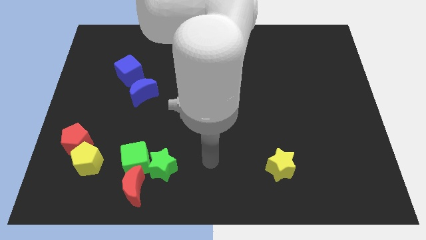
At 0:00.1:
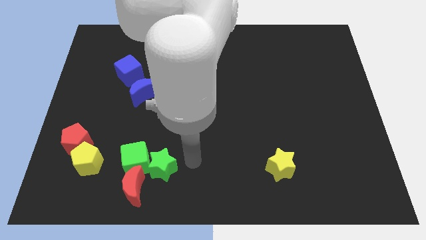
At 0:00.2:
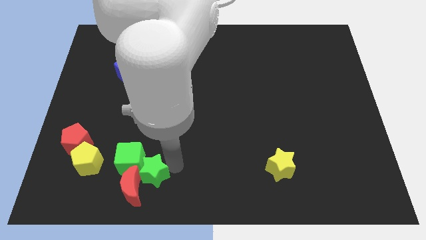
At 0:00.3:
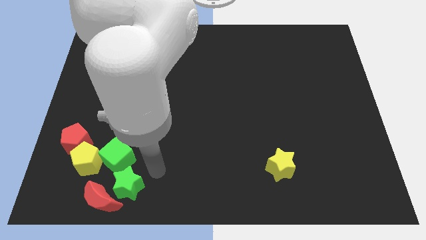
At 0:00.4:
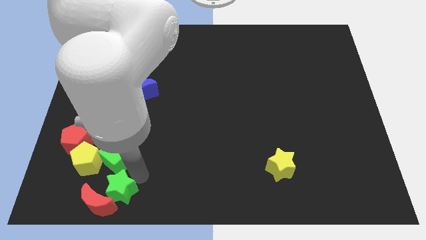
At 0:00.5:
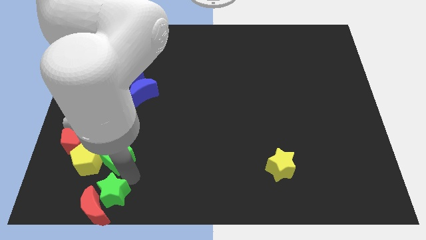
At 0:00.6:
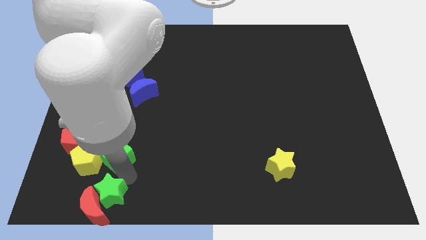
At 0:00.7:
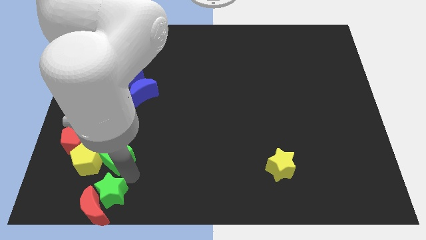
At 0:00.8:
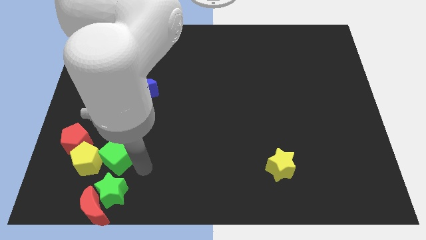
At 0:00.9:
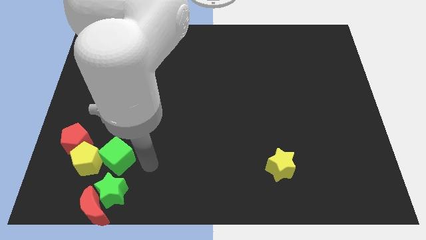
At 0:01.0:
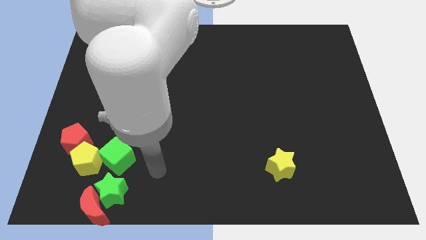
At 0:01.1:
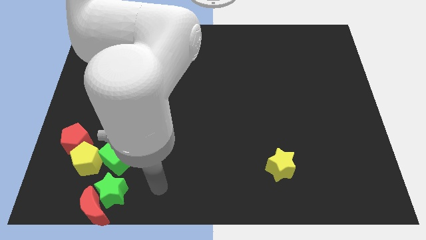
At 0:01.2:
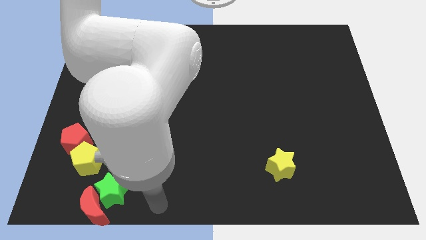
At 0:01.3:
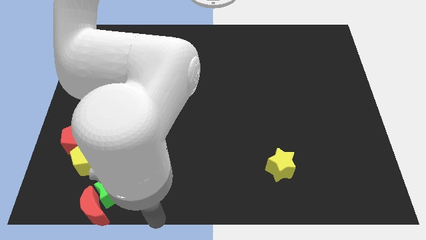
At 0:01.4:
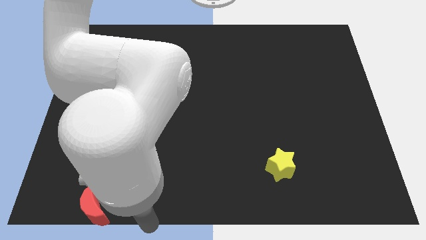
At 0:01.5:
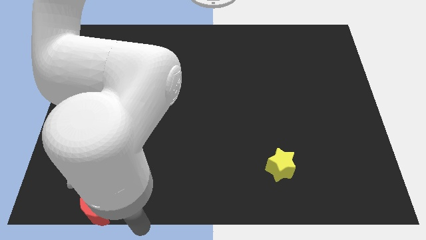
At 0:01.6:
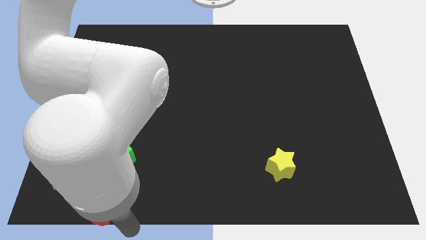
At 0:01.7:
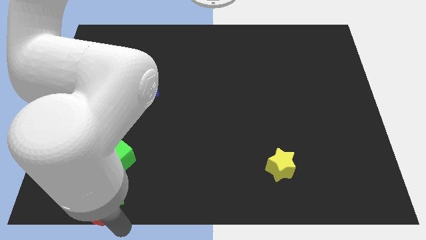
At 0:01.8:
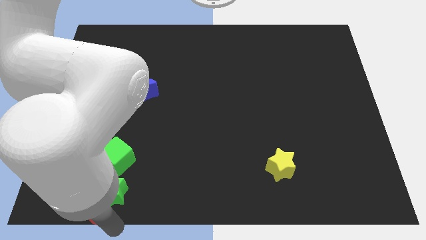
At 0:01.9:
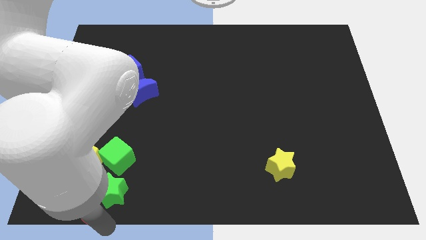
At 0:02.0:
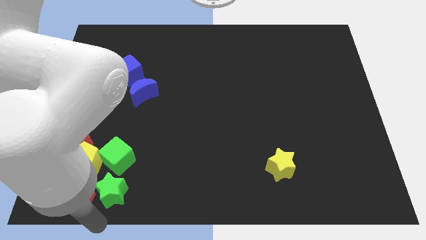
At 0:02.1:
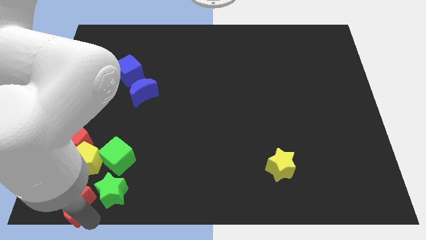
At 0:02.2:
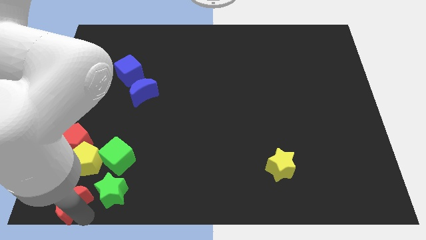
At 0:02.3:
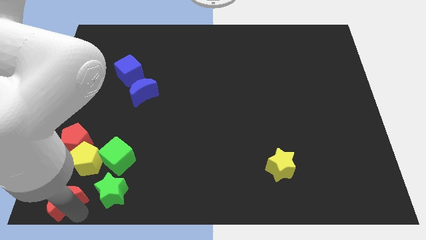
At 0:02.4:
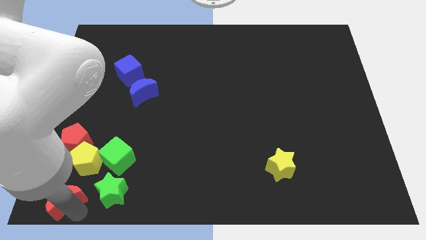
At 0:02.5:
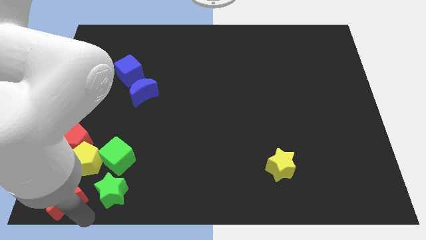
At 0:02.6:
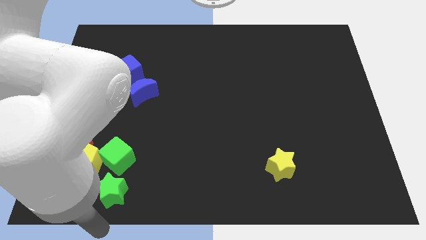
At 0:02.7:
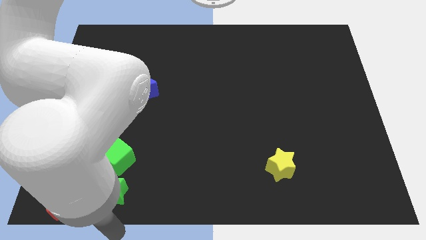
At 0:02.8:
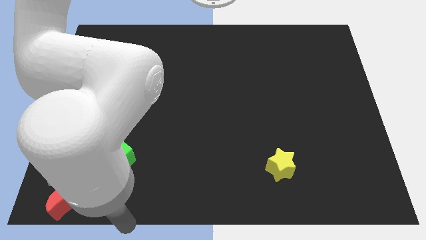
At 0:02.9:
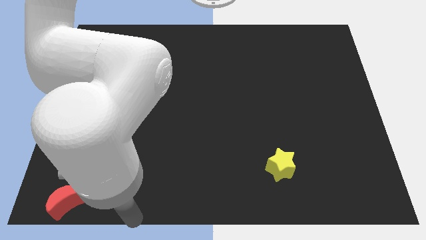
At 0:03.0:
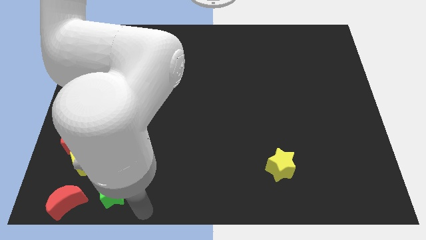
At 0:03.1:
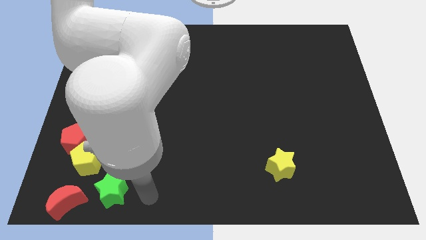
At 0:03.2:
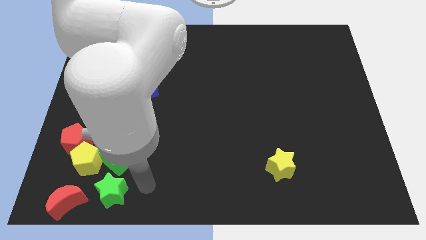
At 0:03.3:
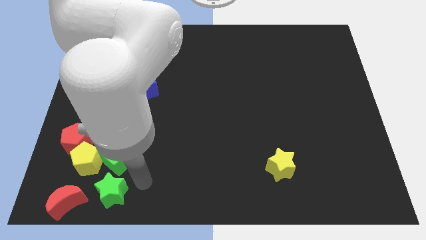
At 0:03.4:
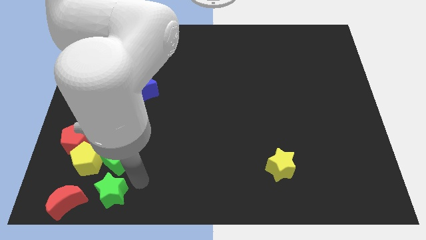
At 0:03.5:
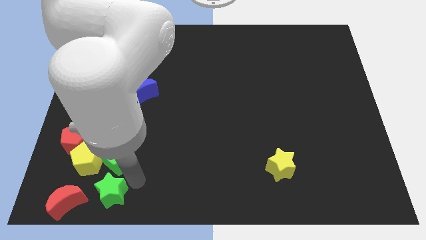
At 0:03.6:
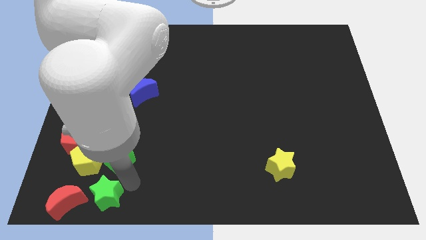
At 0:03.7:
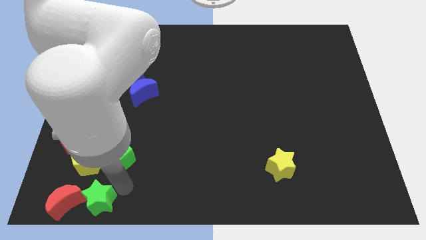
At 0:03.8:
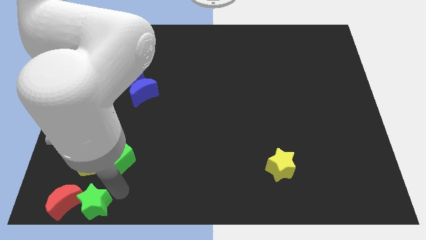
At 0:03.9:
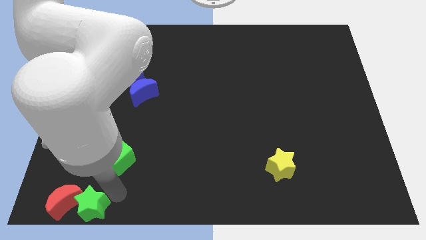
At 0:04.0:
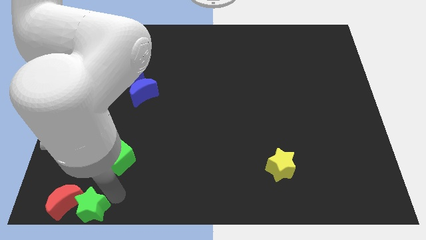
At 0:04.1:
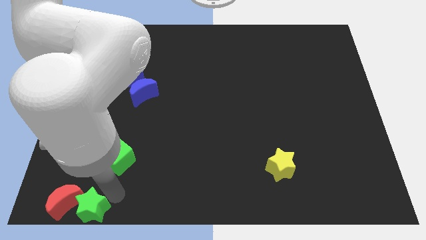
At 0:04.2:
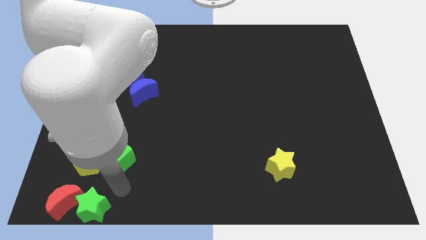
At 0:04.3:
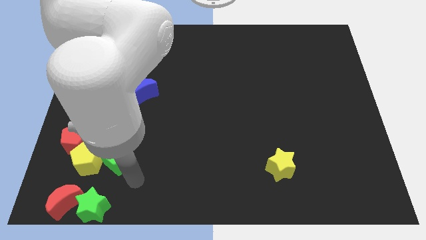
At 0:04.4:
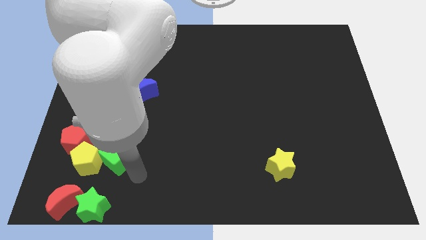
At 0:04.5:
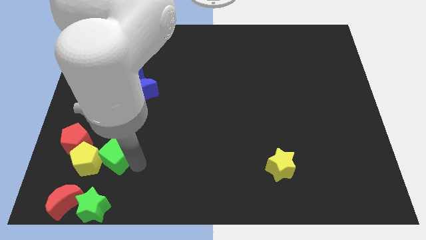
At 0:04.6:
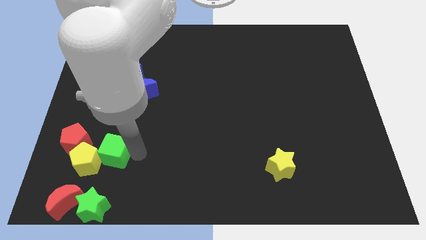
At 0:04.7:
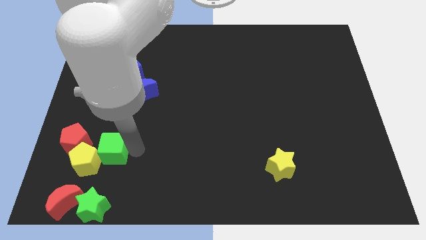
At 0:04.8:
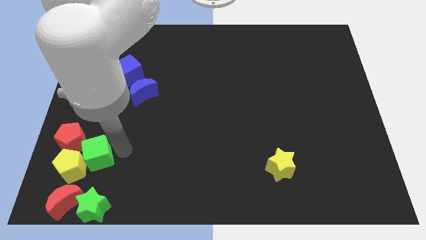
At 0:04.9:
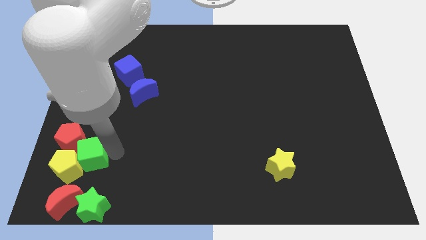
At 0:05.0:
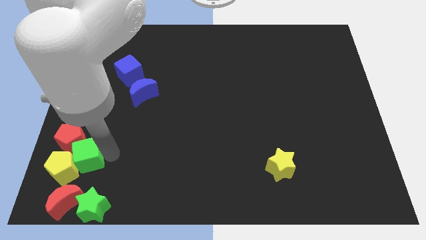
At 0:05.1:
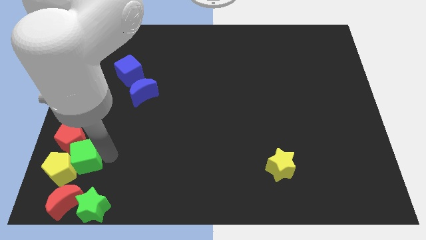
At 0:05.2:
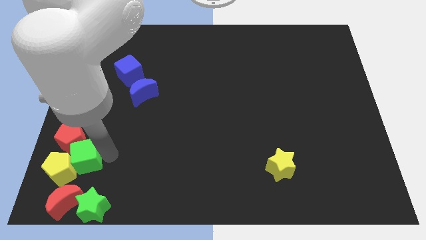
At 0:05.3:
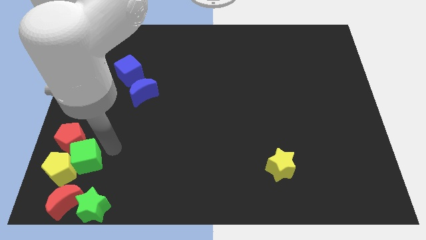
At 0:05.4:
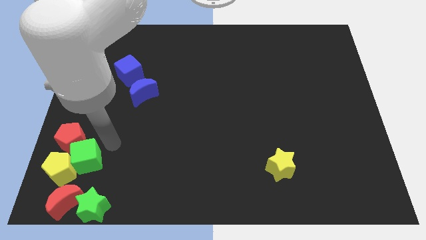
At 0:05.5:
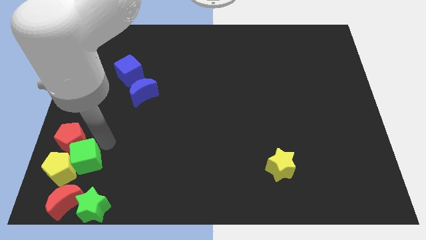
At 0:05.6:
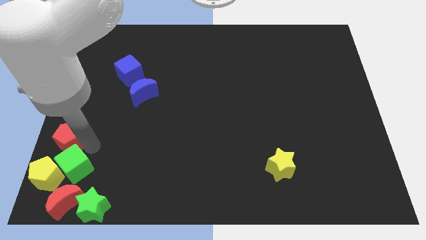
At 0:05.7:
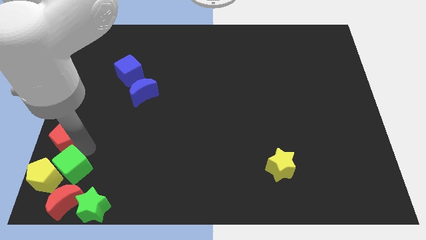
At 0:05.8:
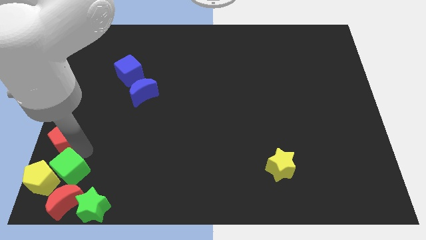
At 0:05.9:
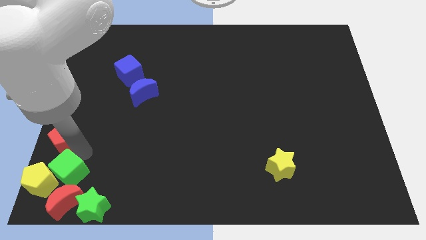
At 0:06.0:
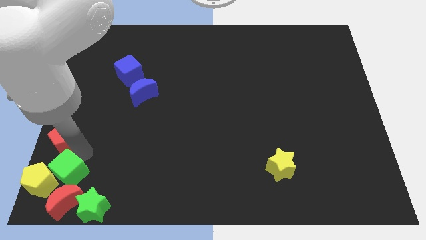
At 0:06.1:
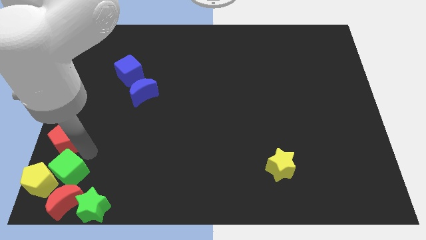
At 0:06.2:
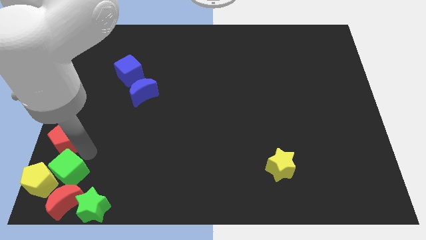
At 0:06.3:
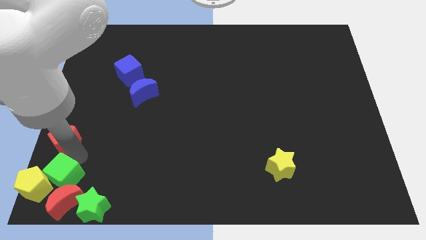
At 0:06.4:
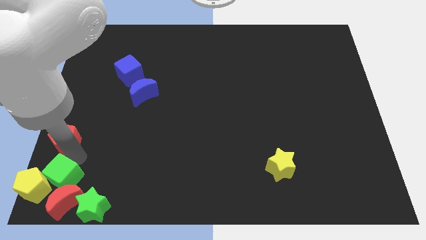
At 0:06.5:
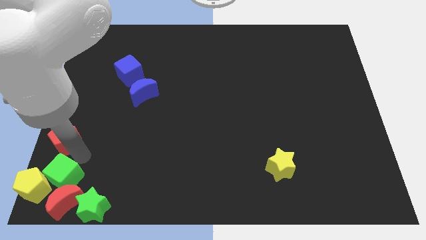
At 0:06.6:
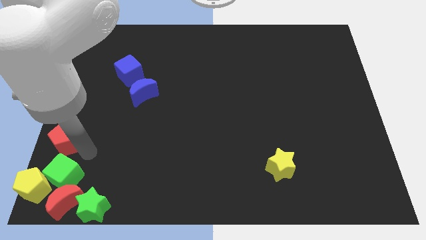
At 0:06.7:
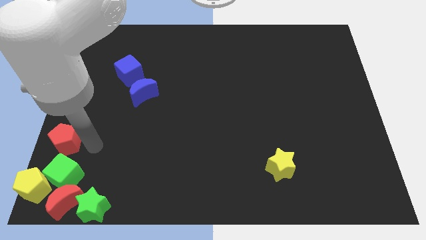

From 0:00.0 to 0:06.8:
push the green star and cube and red crescent to bottom left

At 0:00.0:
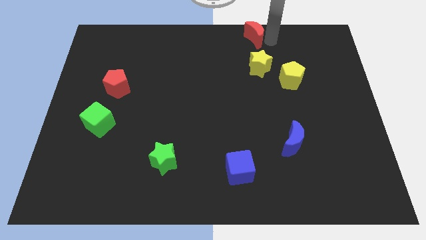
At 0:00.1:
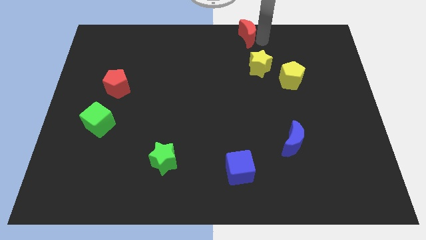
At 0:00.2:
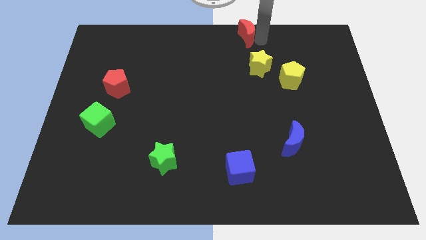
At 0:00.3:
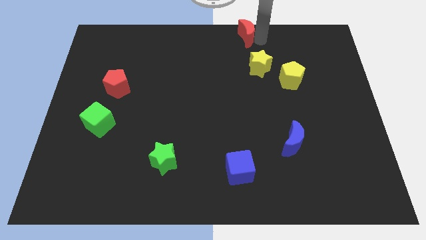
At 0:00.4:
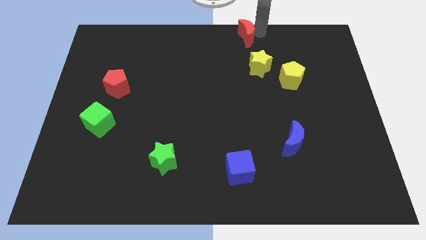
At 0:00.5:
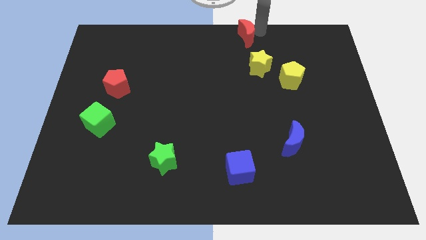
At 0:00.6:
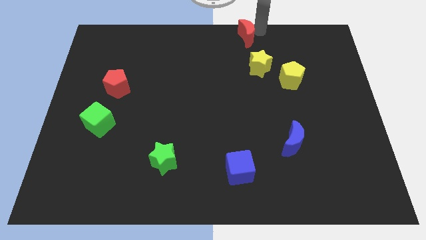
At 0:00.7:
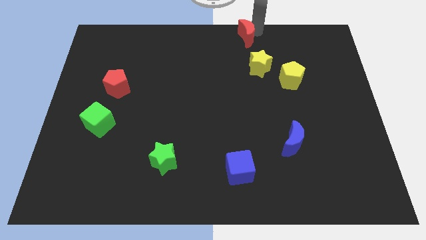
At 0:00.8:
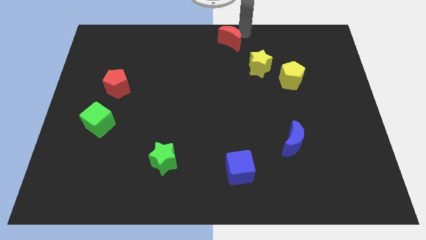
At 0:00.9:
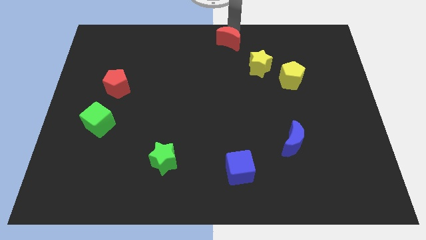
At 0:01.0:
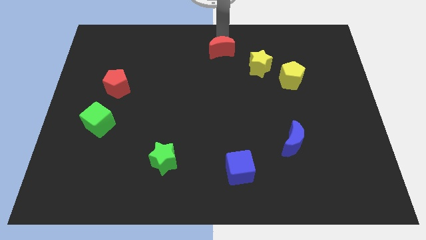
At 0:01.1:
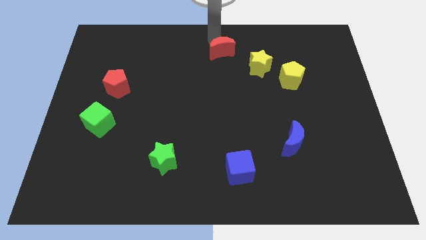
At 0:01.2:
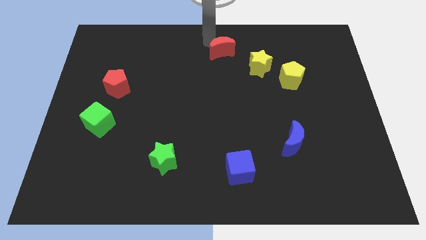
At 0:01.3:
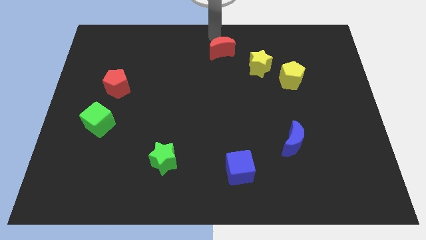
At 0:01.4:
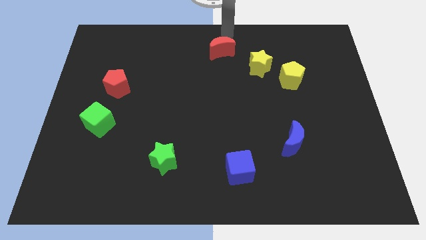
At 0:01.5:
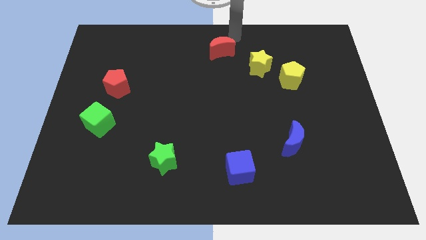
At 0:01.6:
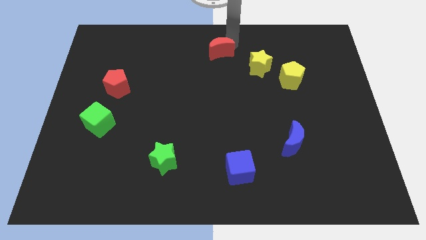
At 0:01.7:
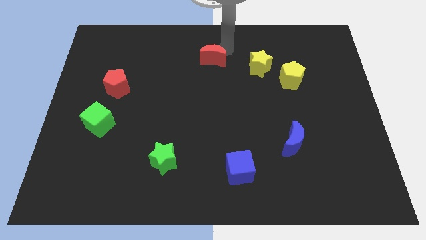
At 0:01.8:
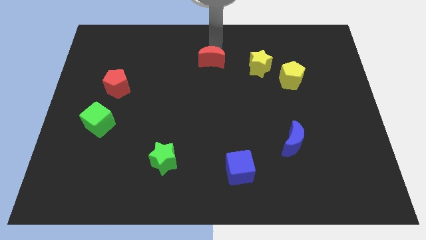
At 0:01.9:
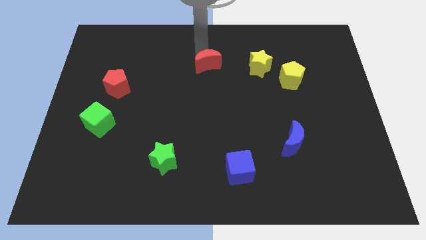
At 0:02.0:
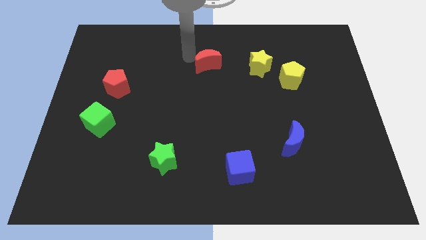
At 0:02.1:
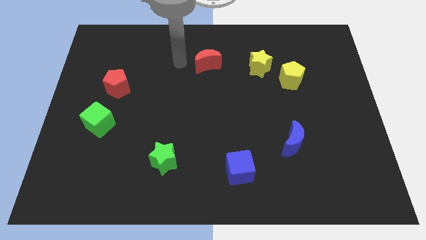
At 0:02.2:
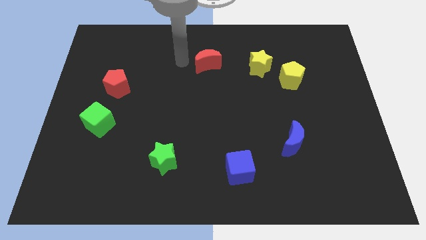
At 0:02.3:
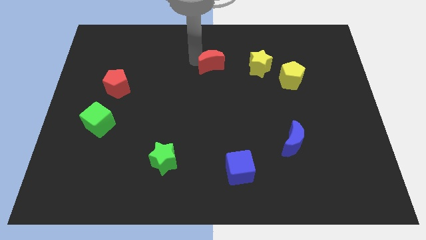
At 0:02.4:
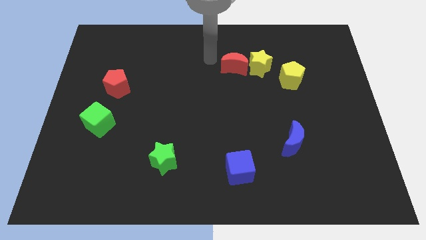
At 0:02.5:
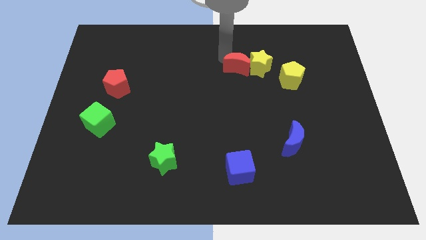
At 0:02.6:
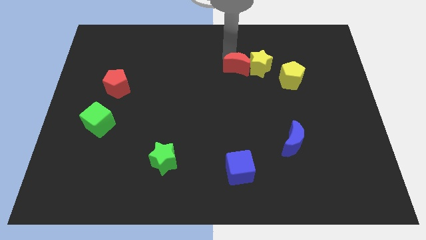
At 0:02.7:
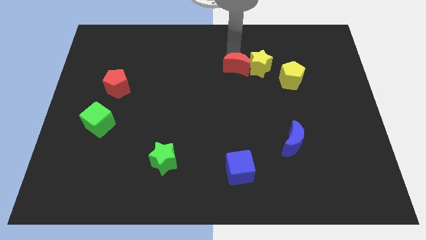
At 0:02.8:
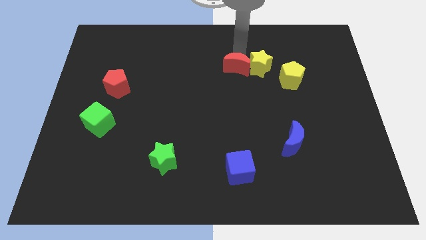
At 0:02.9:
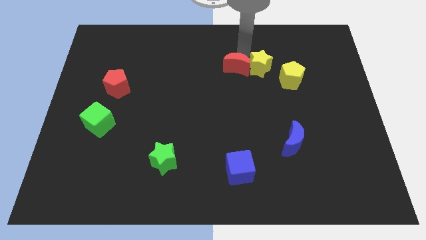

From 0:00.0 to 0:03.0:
push the red crescent towards the left of the yellow star
